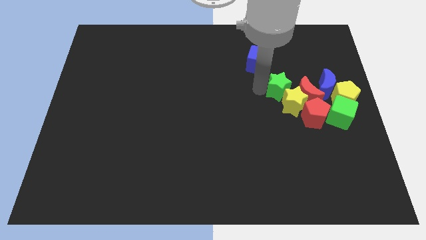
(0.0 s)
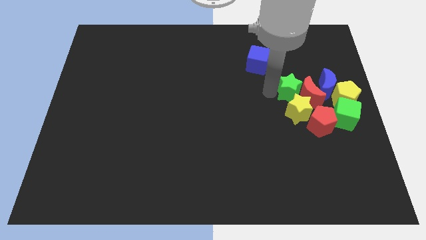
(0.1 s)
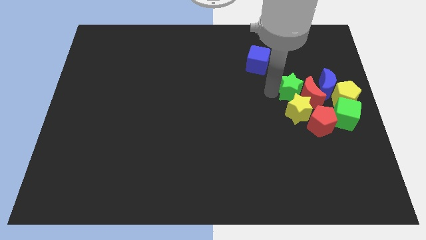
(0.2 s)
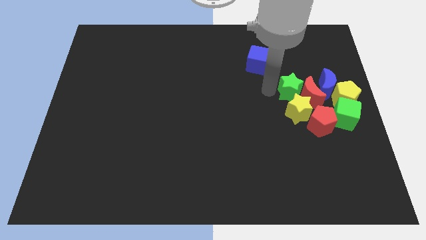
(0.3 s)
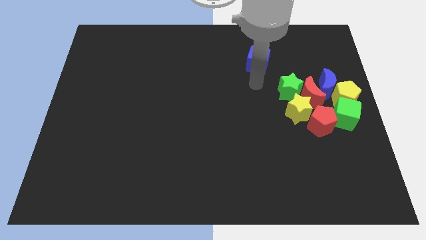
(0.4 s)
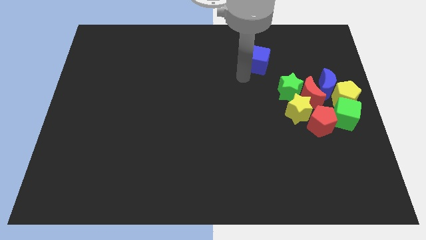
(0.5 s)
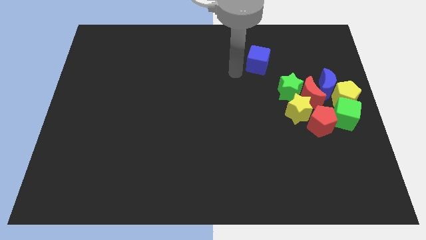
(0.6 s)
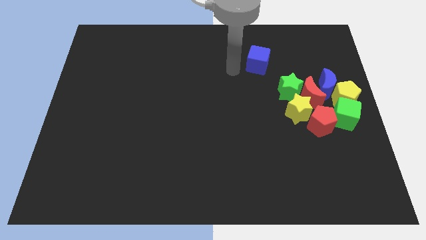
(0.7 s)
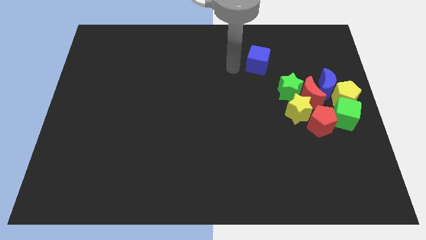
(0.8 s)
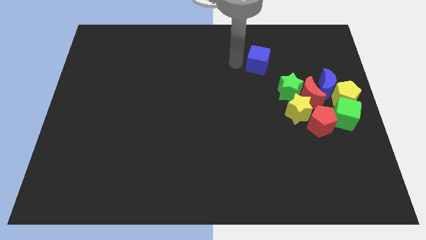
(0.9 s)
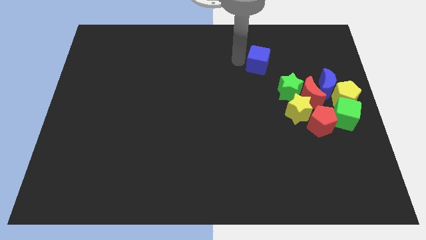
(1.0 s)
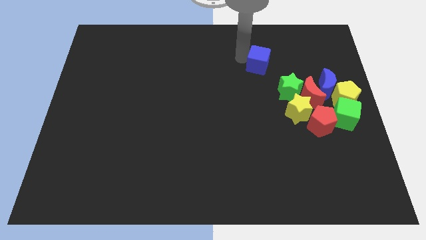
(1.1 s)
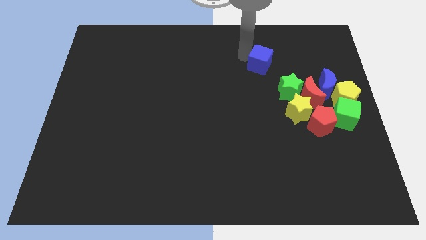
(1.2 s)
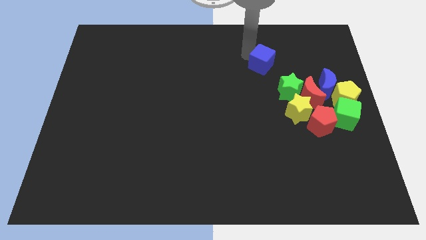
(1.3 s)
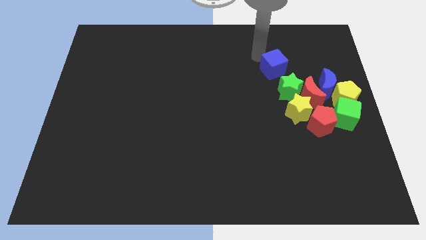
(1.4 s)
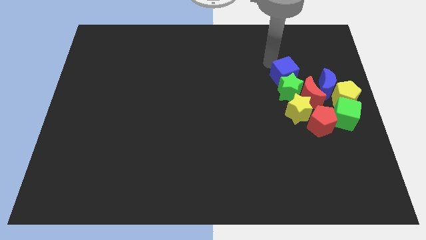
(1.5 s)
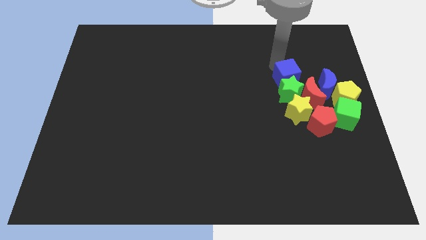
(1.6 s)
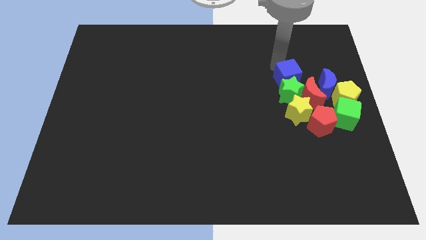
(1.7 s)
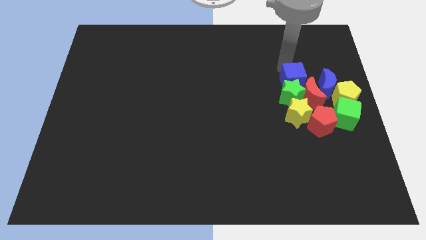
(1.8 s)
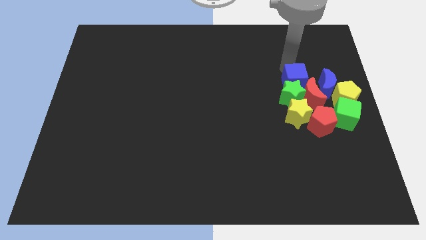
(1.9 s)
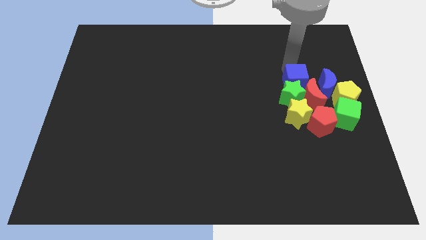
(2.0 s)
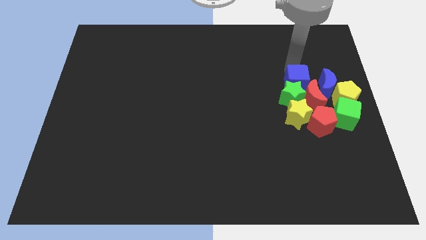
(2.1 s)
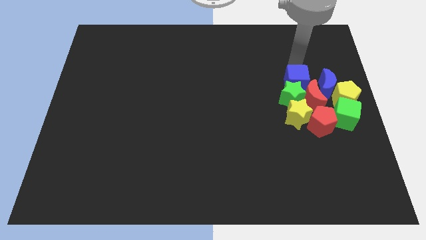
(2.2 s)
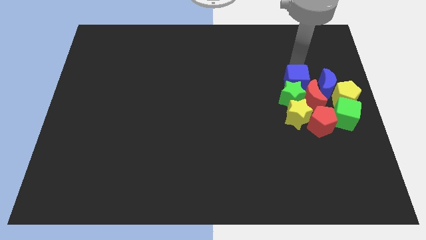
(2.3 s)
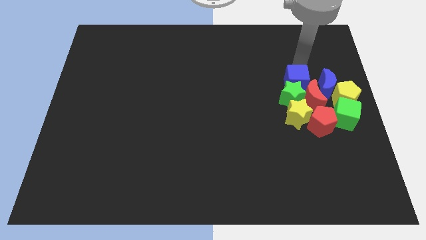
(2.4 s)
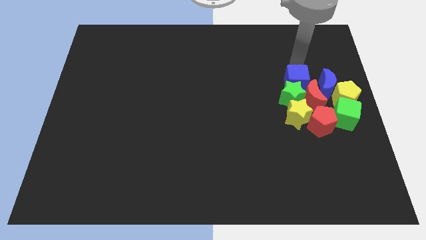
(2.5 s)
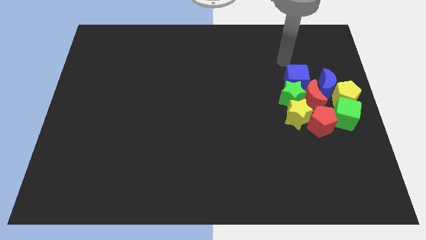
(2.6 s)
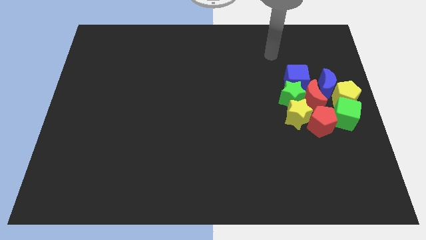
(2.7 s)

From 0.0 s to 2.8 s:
push the blue cube to the top of the green star

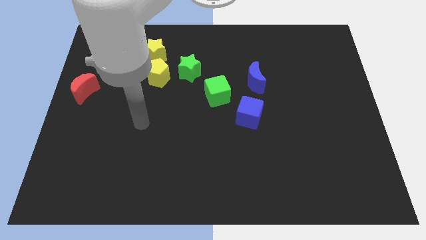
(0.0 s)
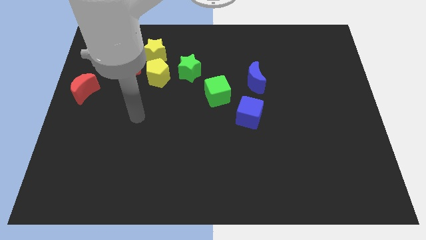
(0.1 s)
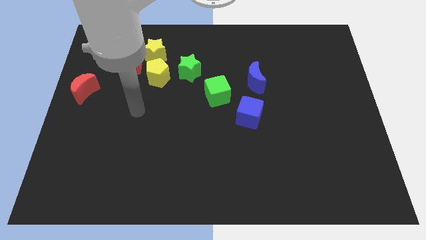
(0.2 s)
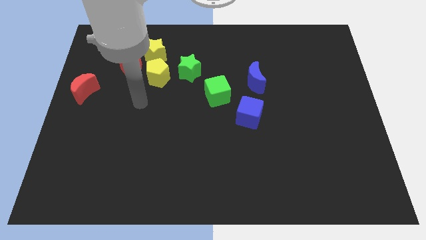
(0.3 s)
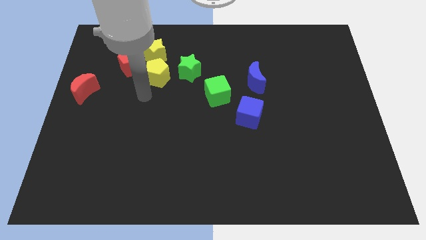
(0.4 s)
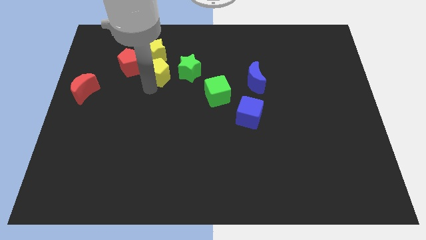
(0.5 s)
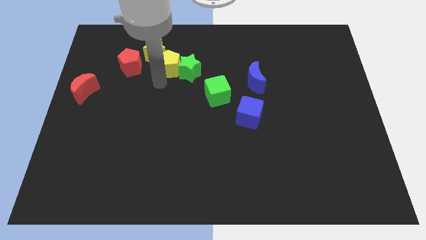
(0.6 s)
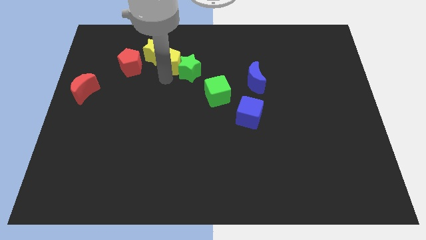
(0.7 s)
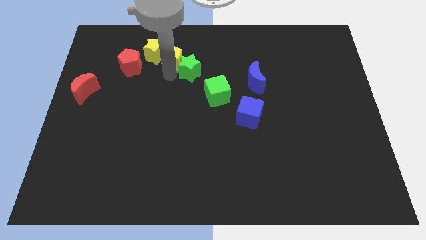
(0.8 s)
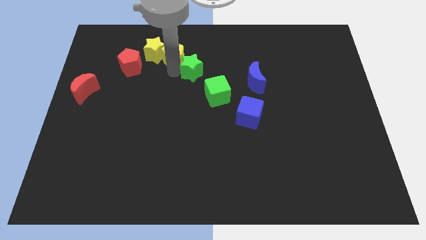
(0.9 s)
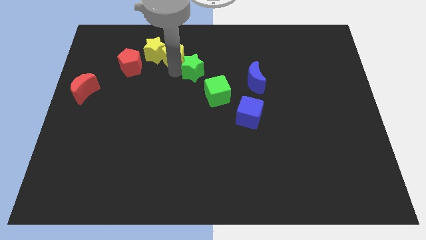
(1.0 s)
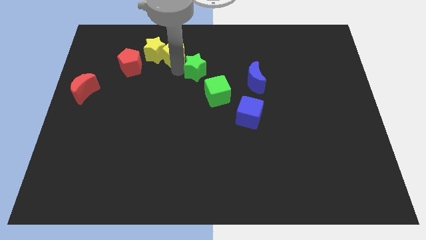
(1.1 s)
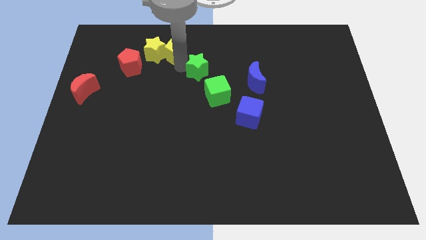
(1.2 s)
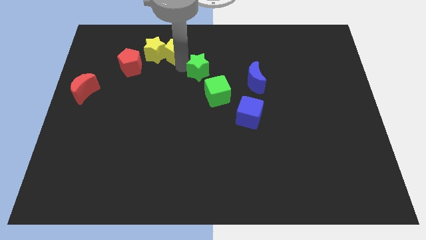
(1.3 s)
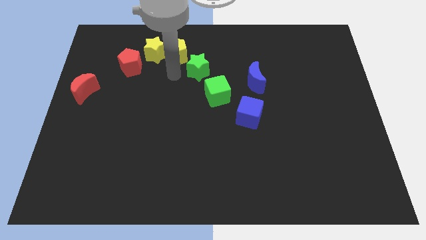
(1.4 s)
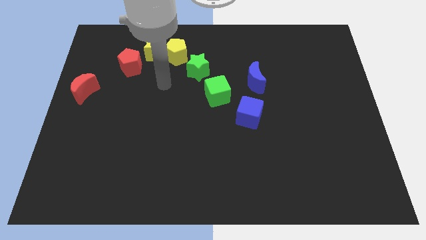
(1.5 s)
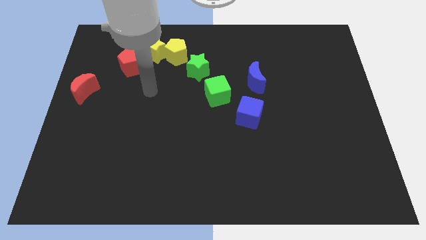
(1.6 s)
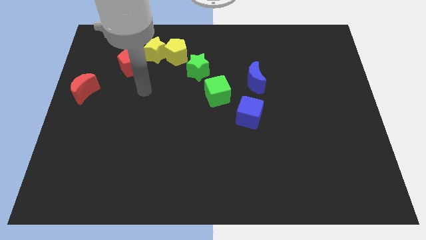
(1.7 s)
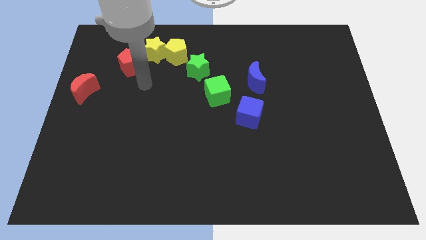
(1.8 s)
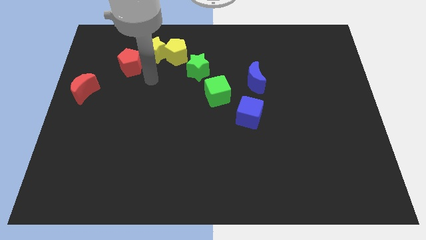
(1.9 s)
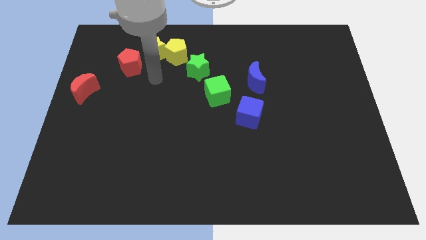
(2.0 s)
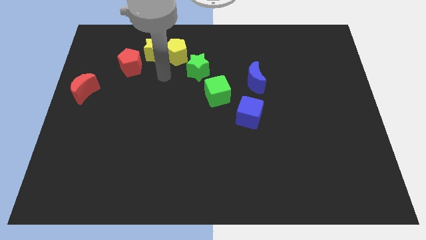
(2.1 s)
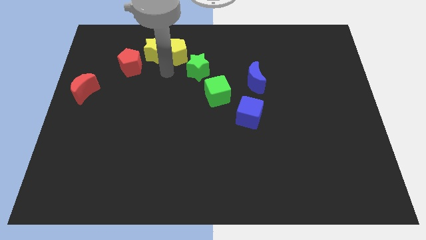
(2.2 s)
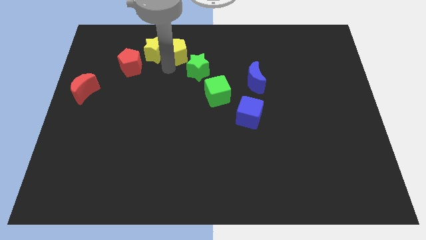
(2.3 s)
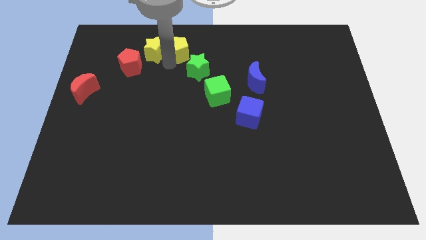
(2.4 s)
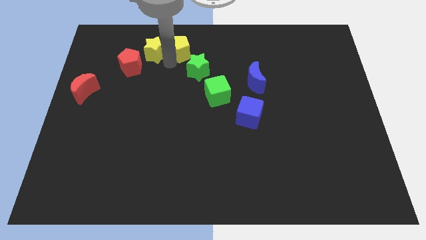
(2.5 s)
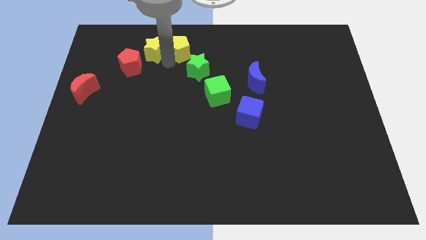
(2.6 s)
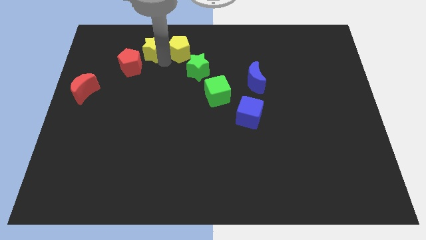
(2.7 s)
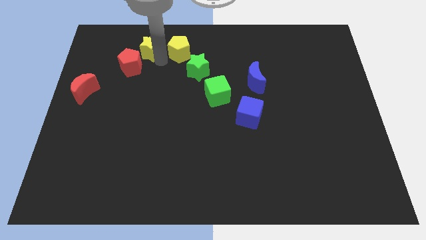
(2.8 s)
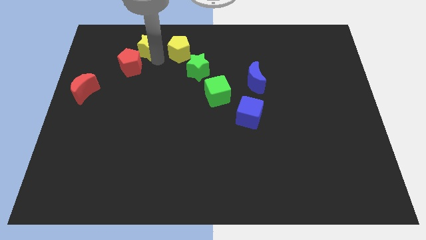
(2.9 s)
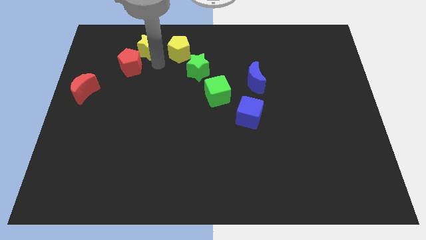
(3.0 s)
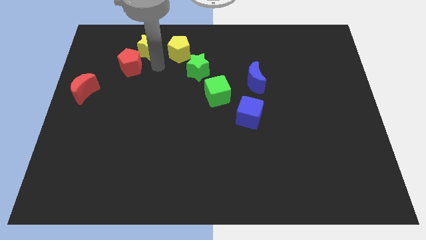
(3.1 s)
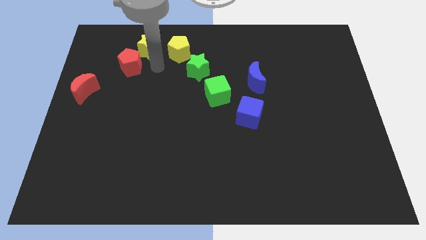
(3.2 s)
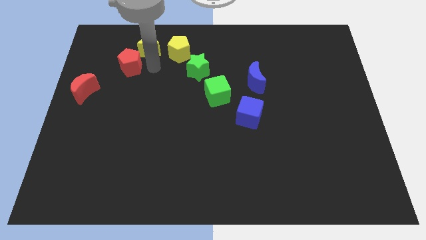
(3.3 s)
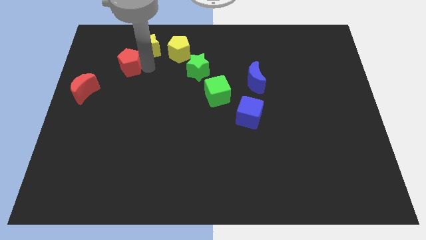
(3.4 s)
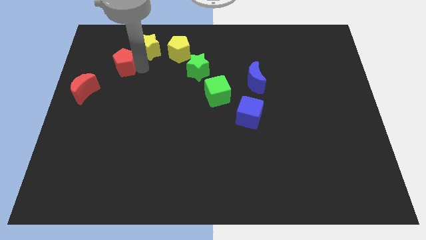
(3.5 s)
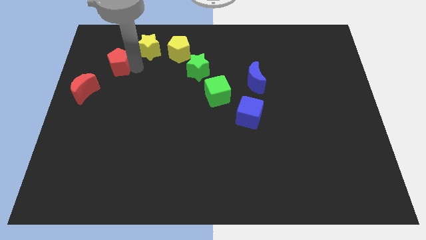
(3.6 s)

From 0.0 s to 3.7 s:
place yellow pentagon to the right side of the yellow star

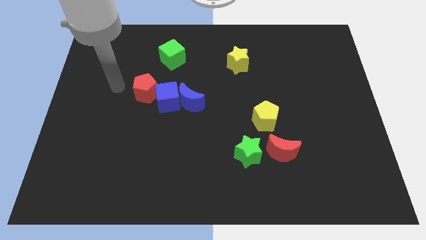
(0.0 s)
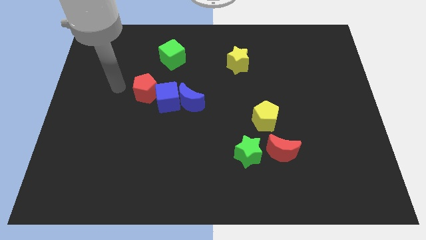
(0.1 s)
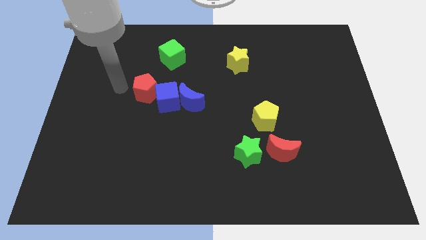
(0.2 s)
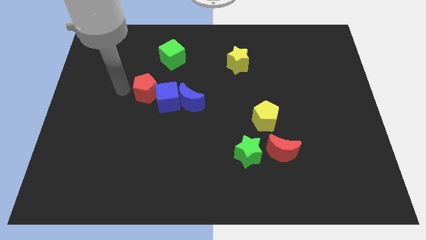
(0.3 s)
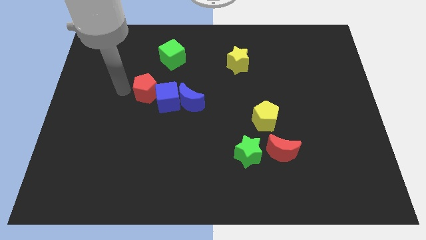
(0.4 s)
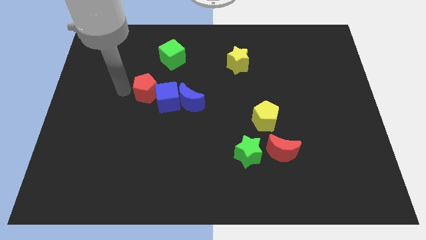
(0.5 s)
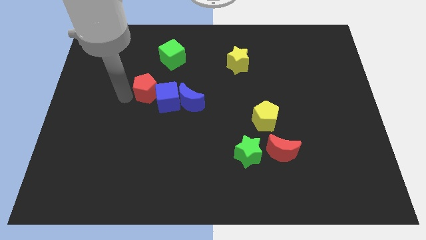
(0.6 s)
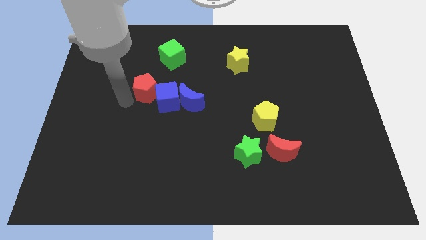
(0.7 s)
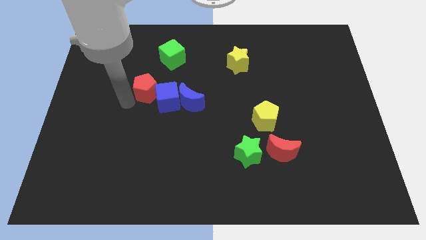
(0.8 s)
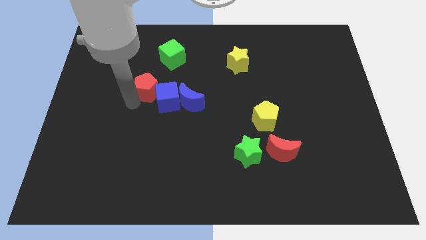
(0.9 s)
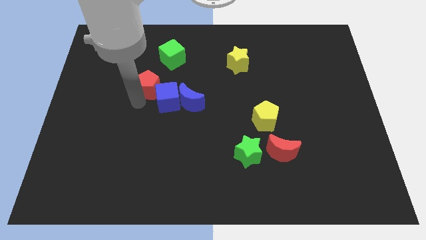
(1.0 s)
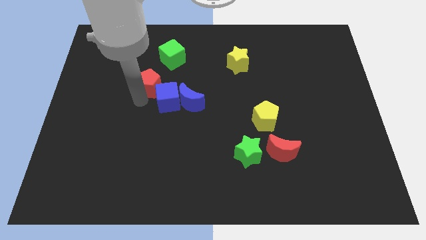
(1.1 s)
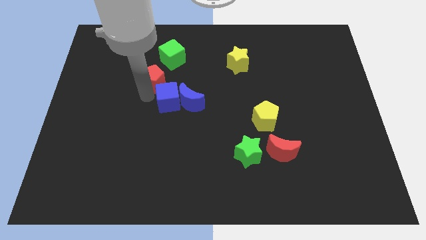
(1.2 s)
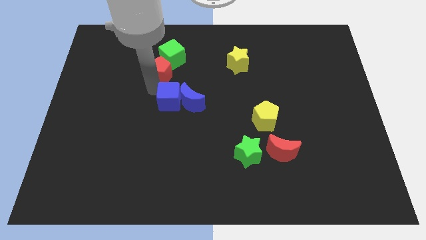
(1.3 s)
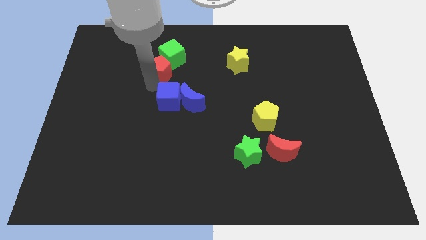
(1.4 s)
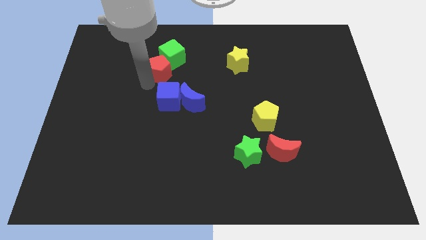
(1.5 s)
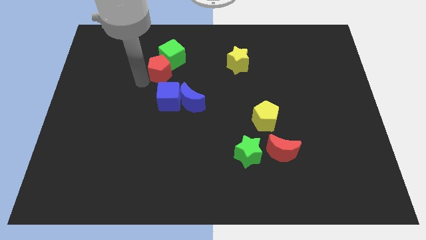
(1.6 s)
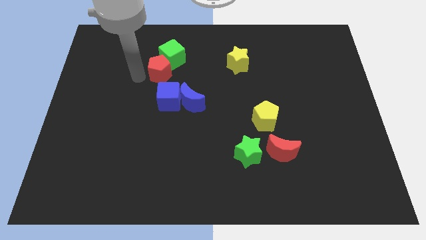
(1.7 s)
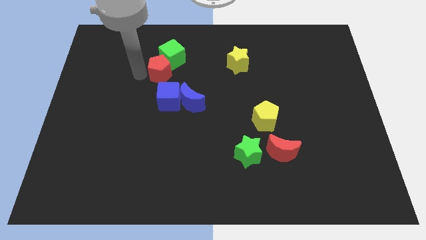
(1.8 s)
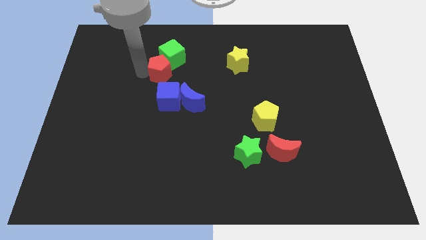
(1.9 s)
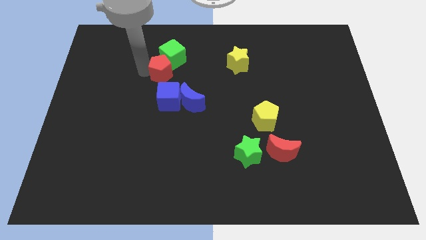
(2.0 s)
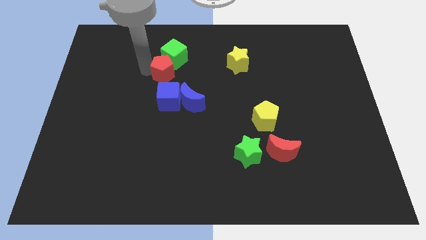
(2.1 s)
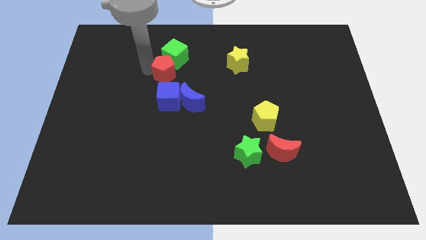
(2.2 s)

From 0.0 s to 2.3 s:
push red pentagon below green cube

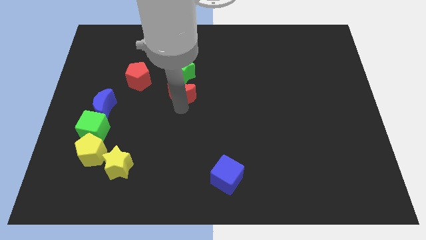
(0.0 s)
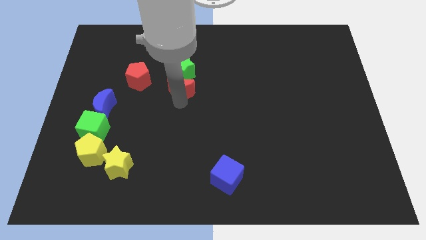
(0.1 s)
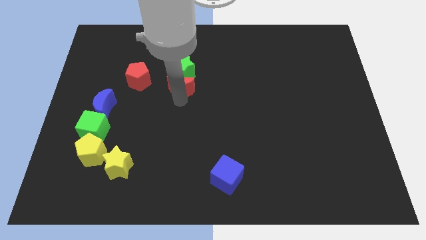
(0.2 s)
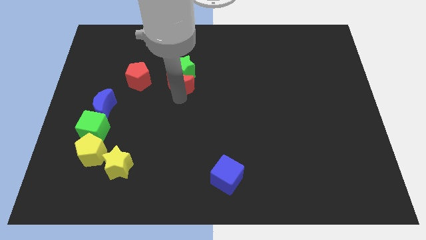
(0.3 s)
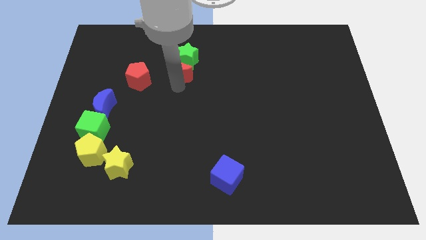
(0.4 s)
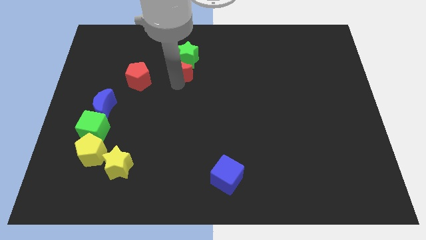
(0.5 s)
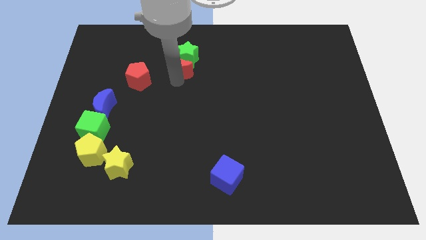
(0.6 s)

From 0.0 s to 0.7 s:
push the red moon into the green star
